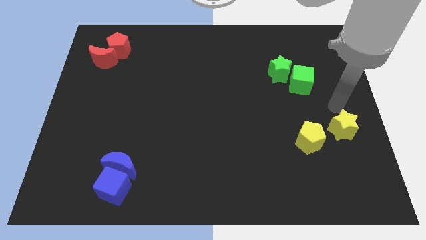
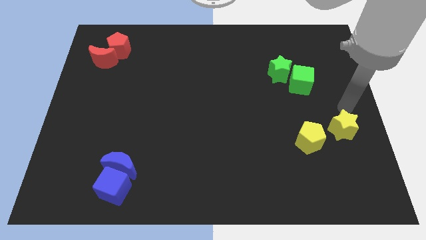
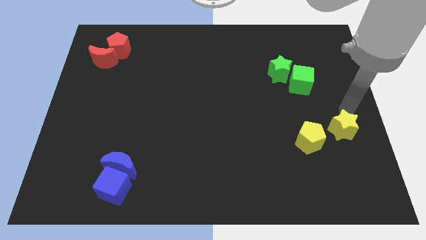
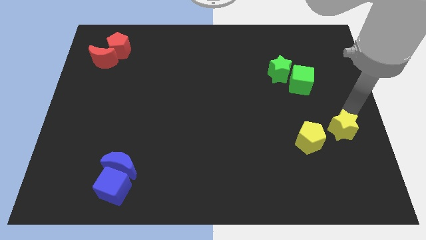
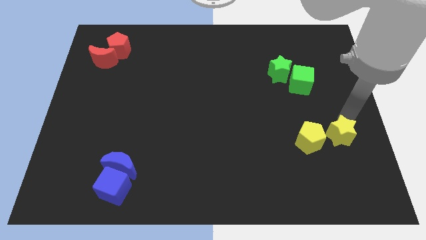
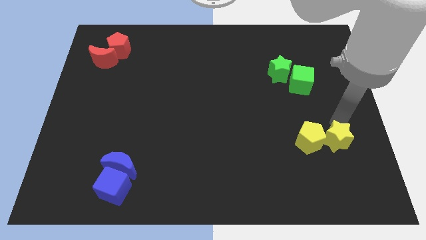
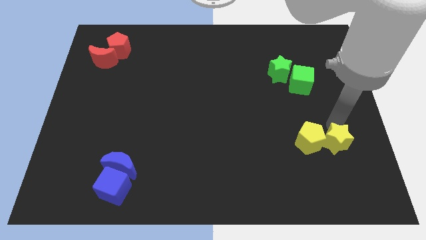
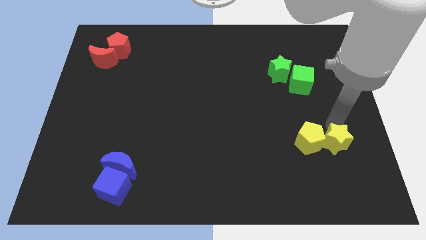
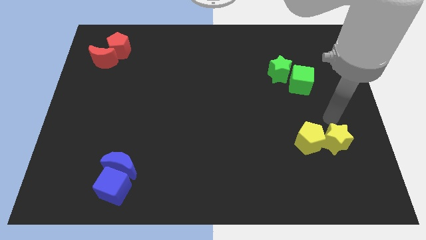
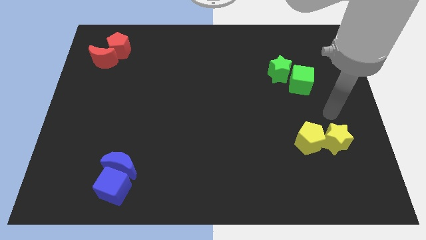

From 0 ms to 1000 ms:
push the yellow star into yellow pentagon

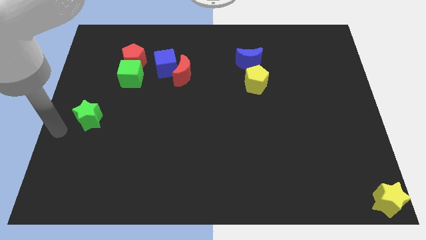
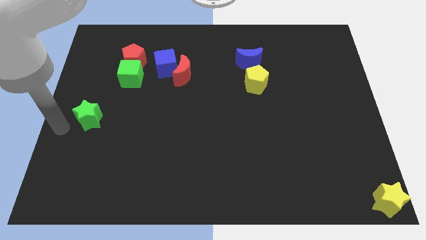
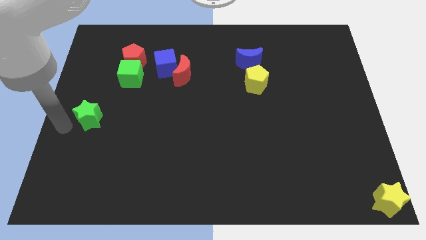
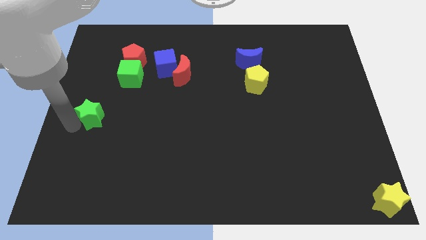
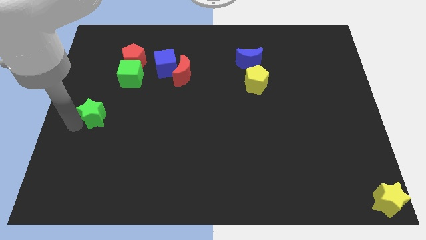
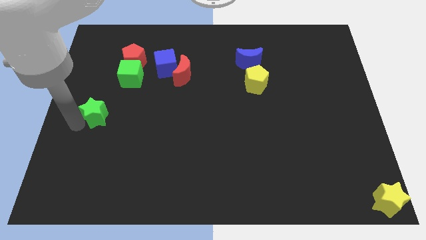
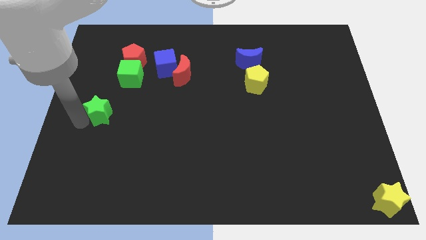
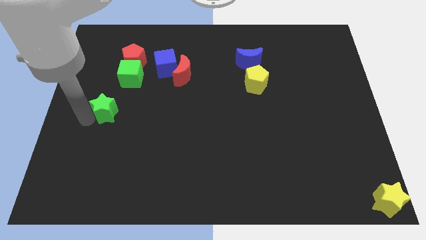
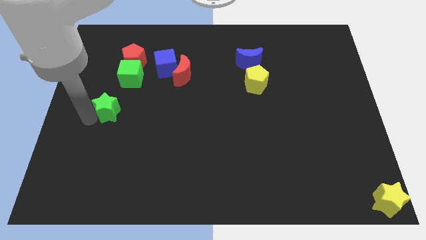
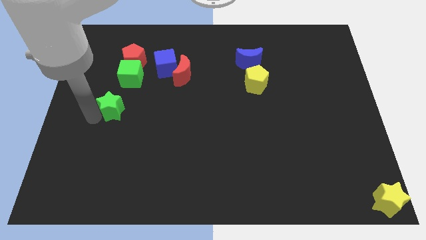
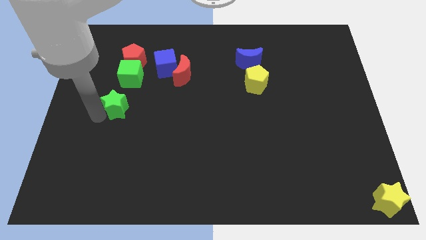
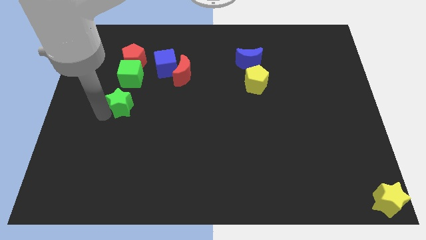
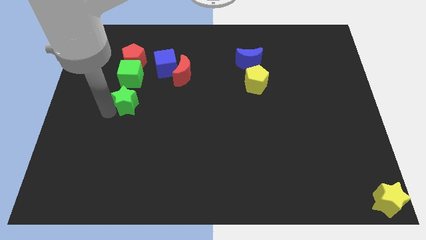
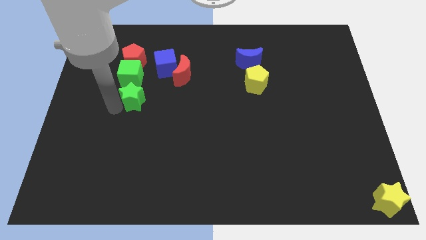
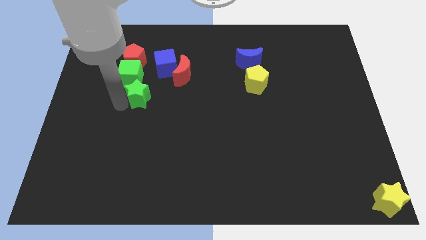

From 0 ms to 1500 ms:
push the green star bottom of the green cube

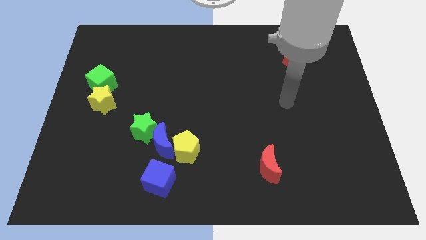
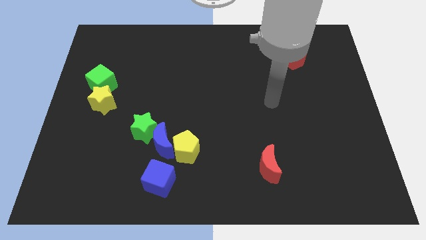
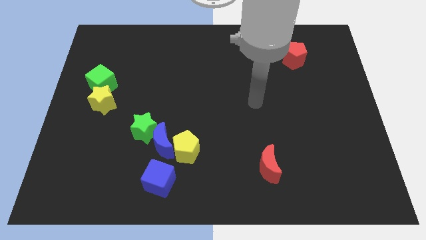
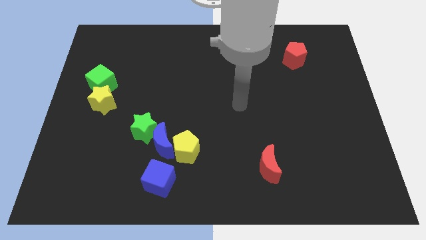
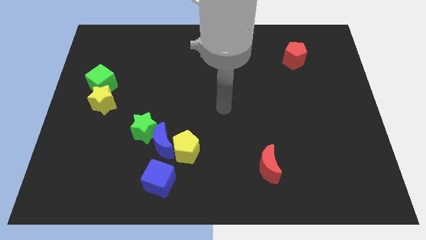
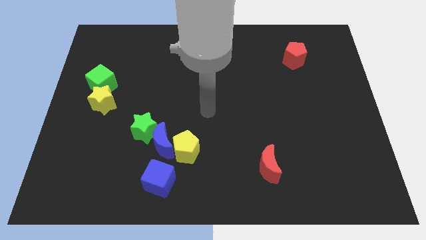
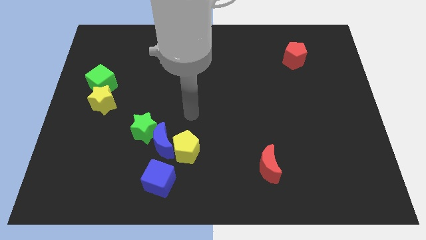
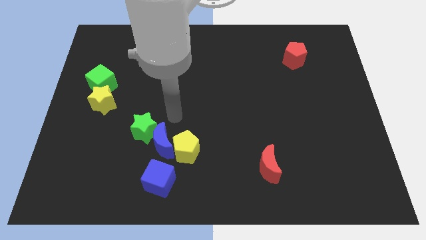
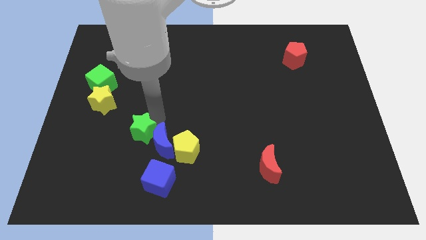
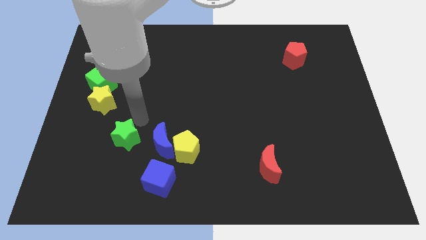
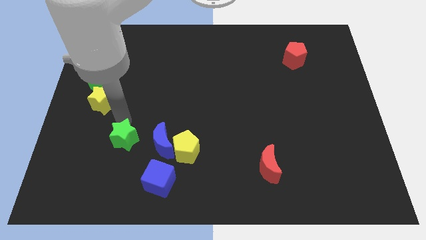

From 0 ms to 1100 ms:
tap your hand on the top side of green star

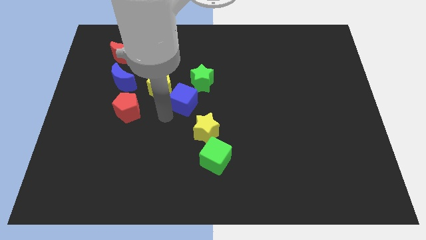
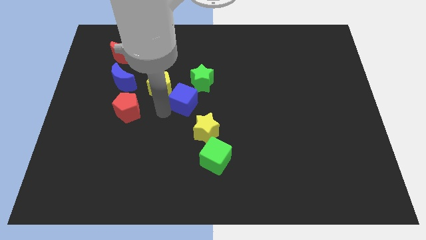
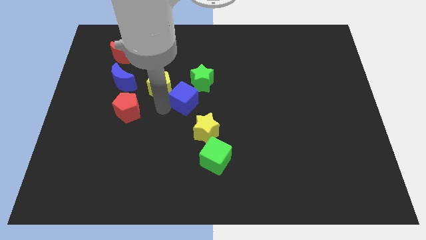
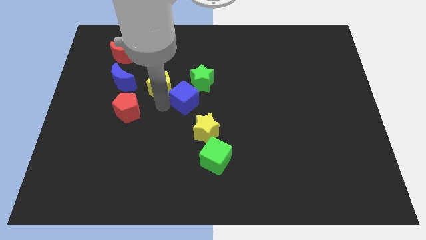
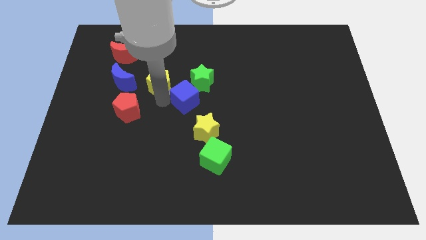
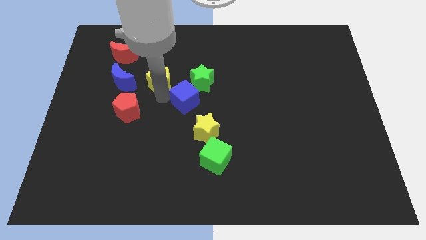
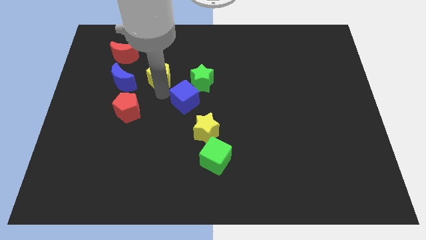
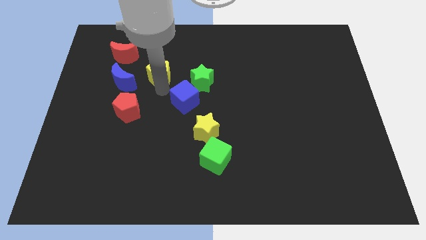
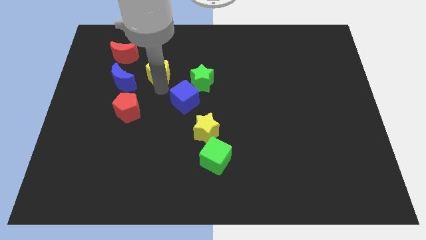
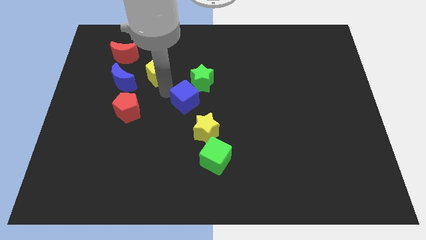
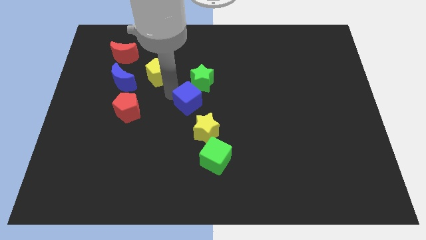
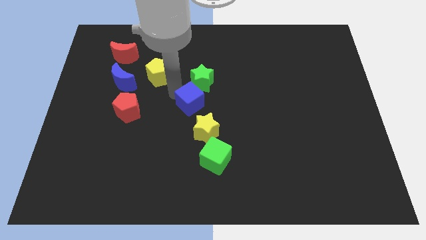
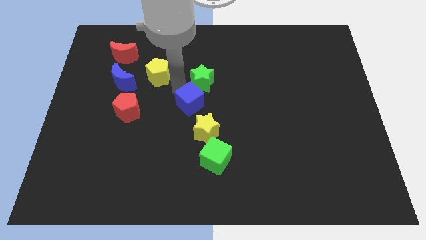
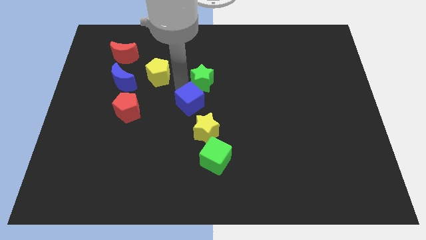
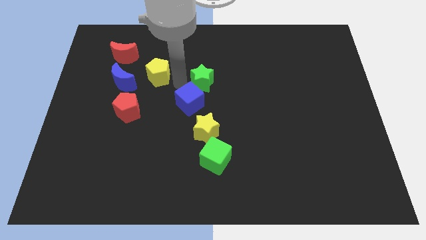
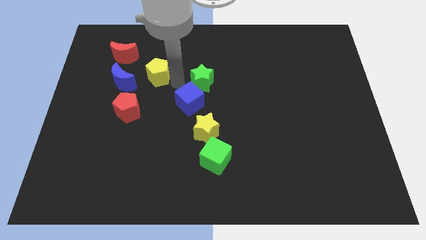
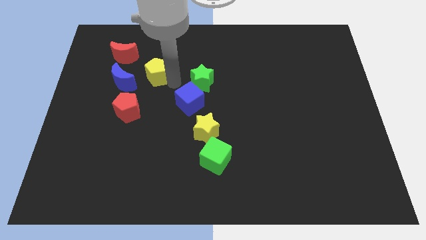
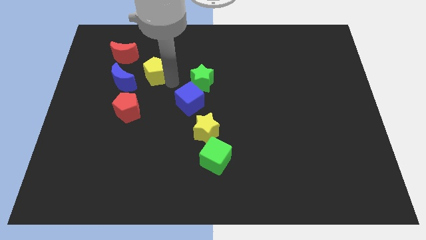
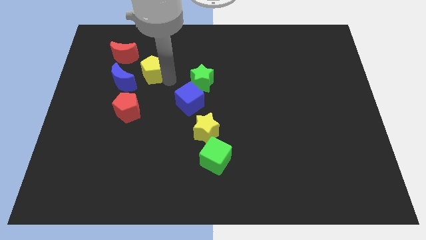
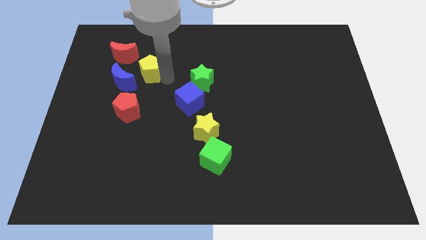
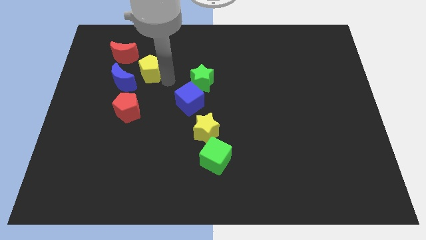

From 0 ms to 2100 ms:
push the yellow pentagon towards the red crescent

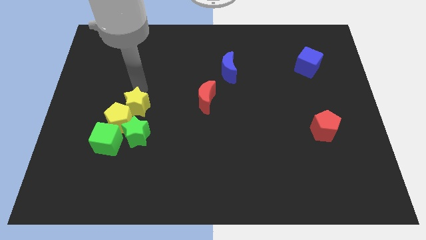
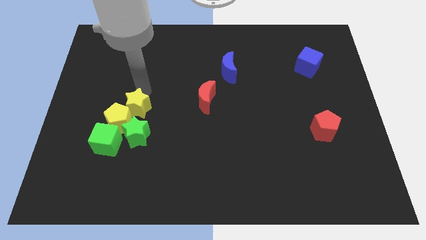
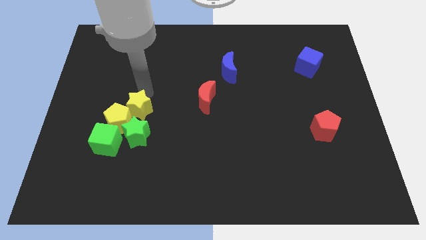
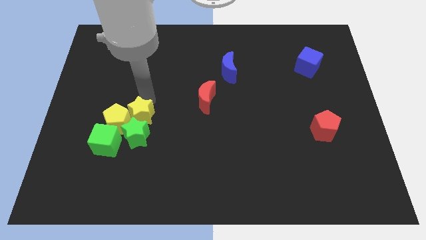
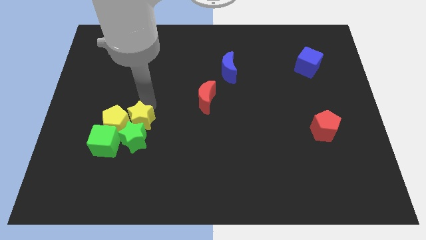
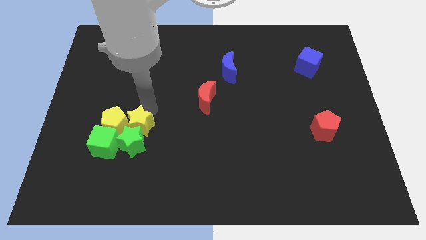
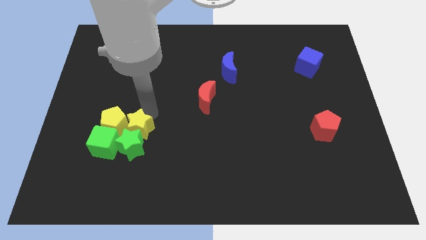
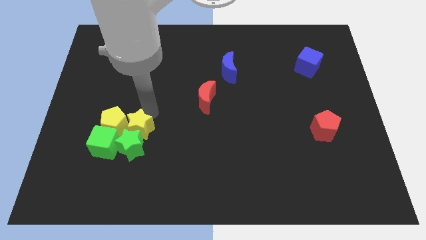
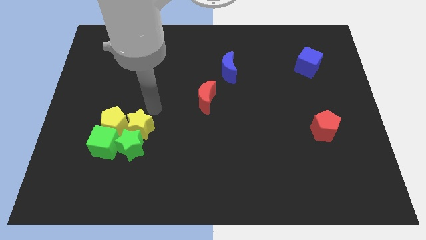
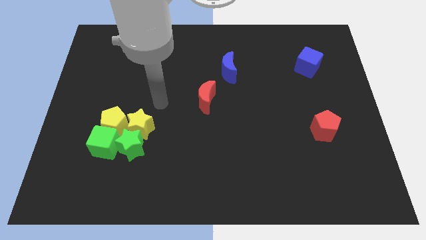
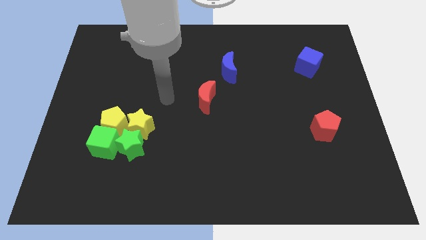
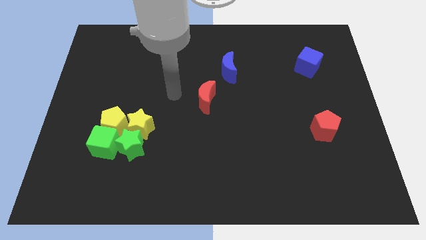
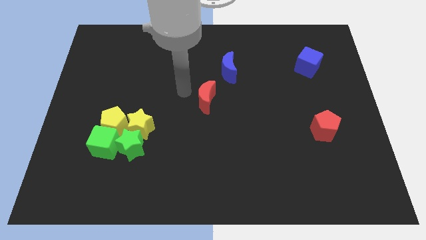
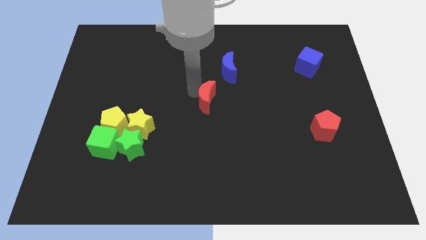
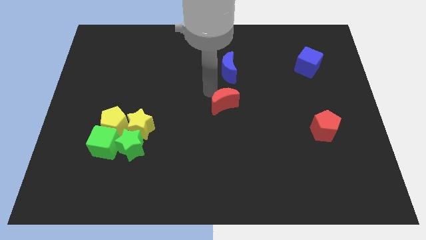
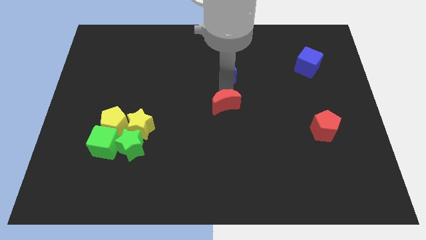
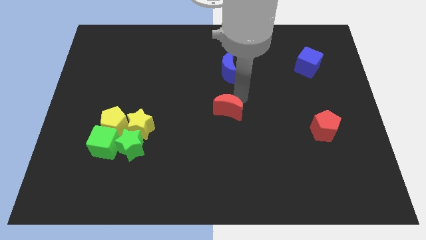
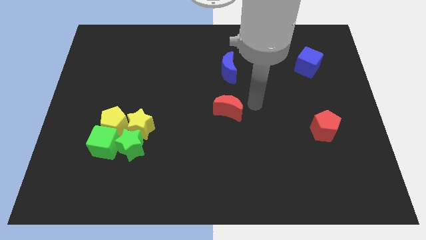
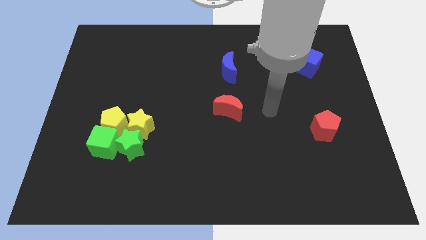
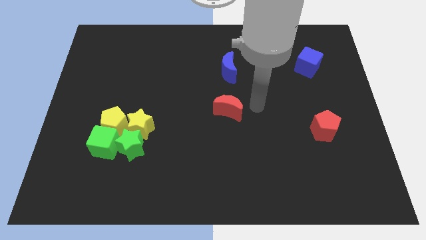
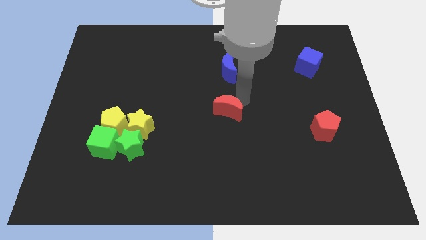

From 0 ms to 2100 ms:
move the yellow star into the green star

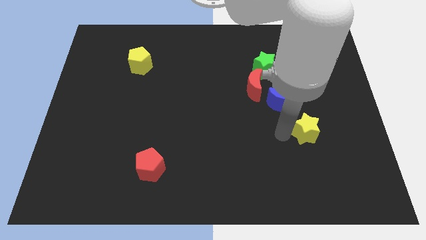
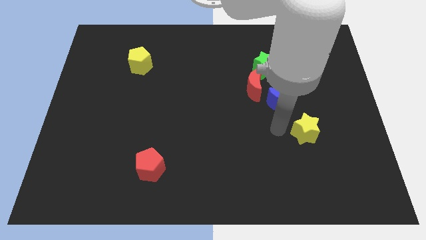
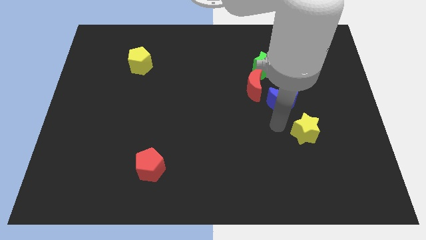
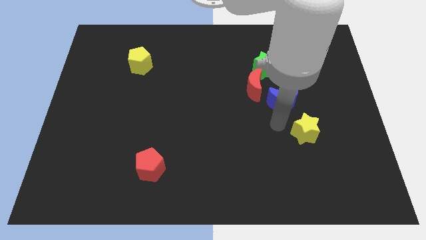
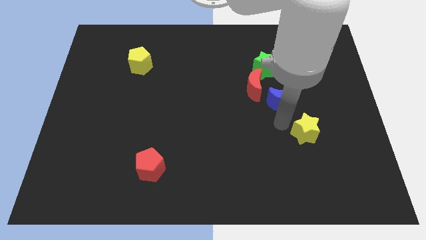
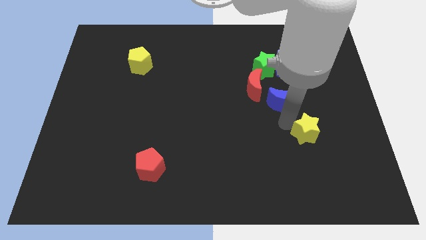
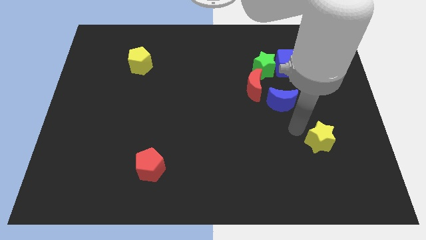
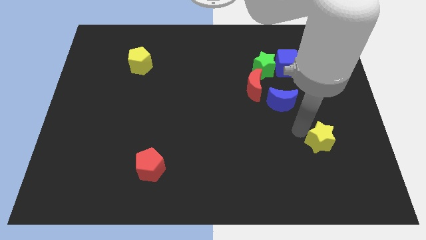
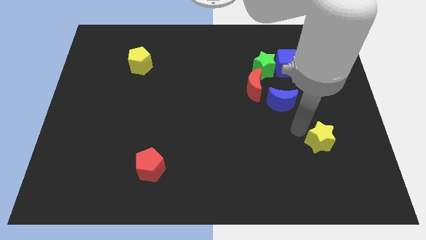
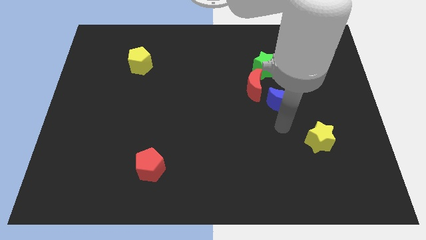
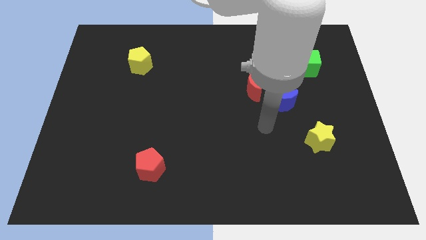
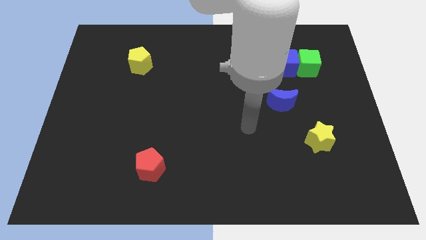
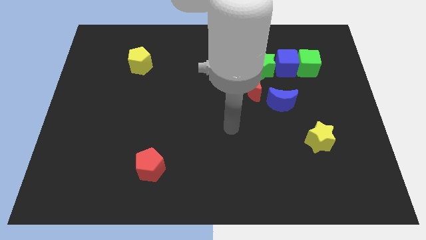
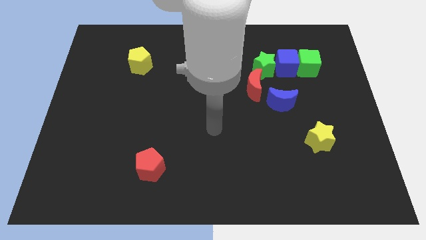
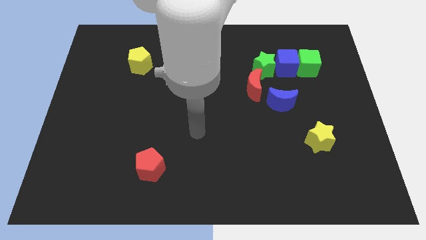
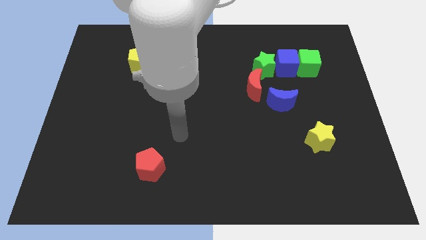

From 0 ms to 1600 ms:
slightly push the yellow star towards the right bottom
